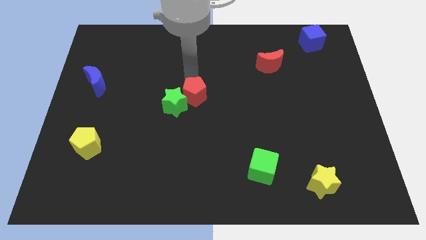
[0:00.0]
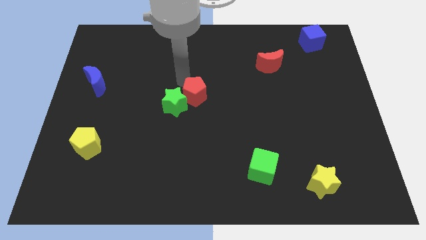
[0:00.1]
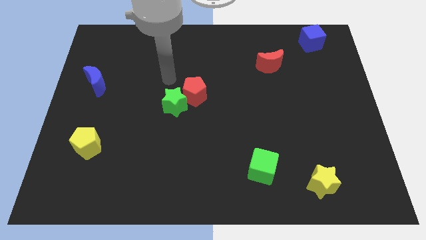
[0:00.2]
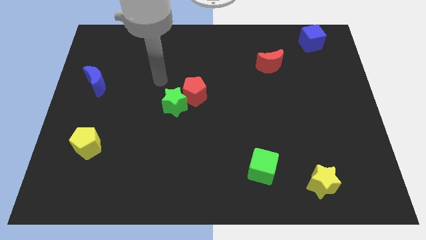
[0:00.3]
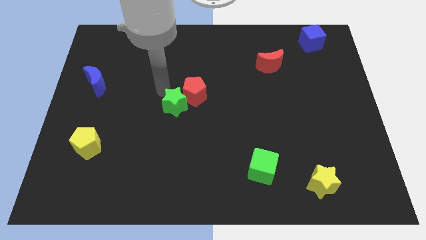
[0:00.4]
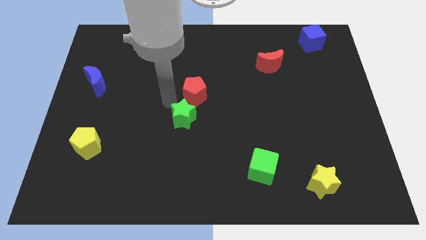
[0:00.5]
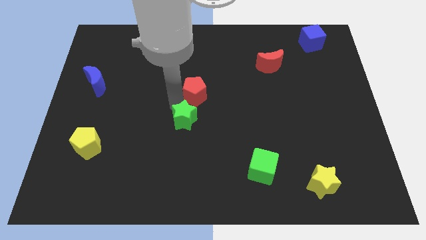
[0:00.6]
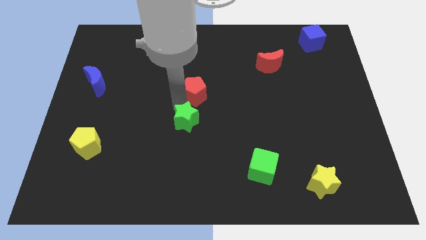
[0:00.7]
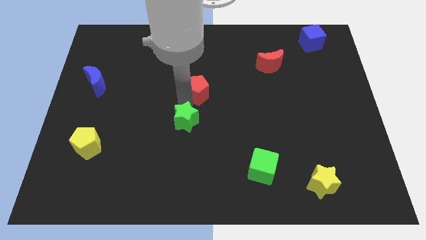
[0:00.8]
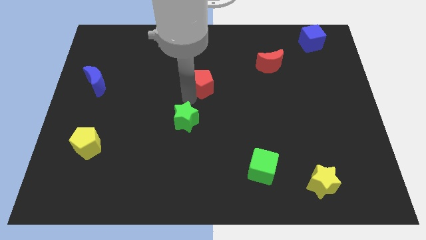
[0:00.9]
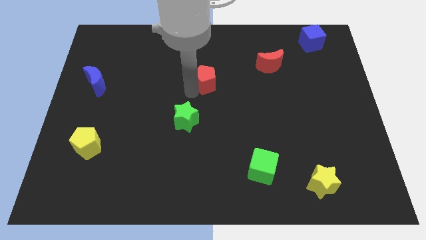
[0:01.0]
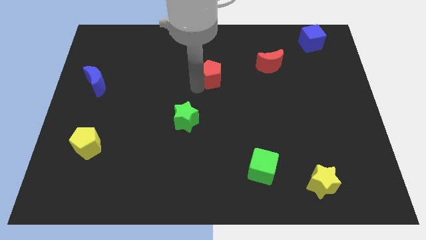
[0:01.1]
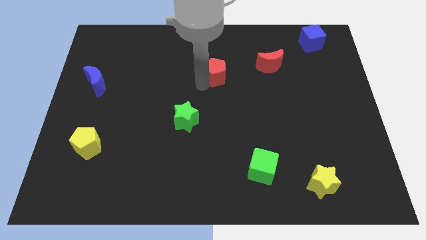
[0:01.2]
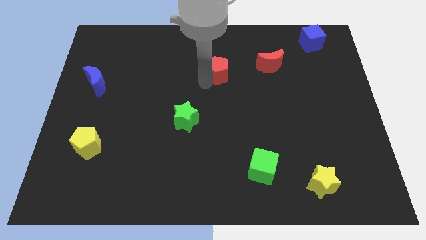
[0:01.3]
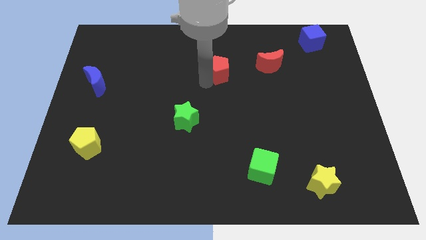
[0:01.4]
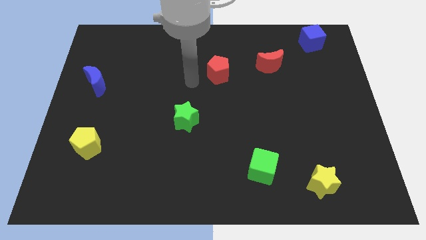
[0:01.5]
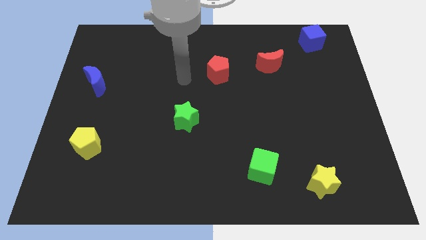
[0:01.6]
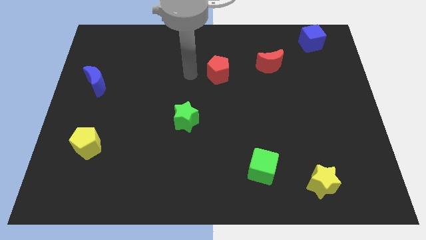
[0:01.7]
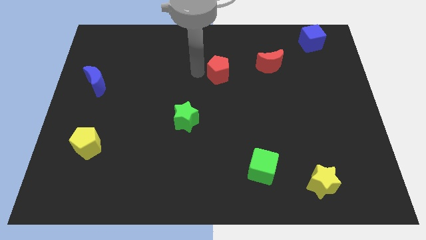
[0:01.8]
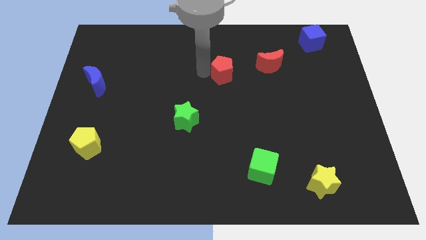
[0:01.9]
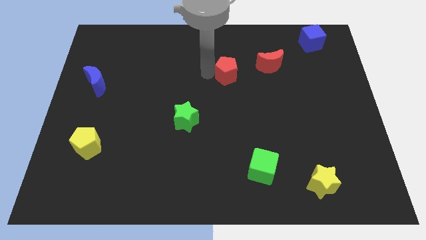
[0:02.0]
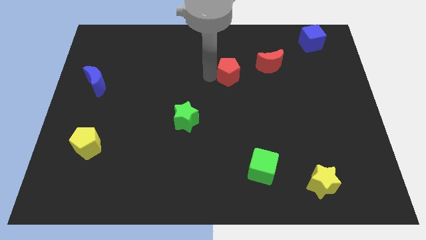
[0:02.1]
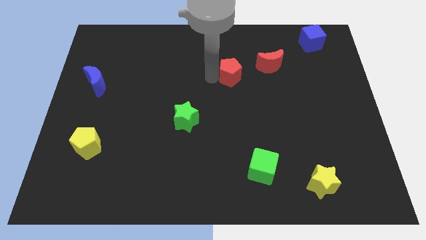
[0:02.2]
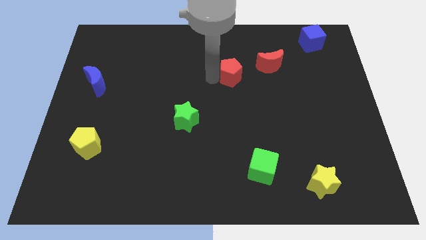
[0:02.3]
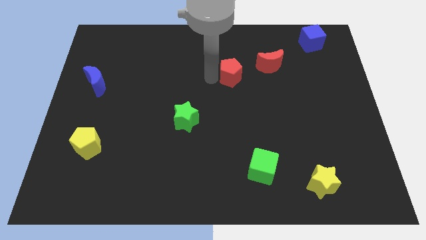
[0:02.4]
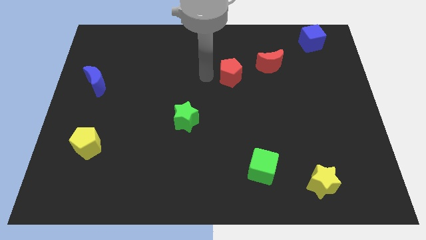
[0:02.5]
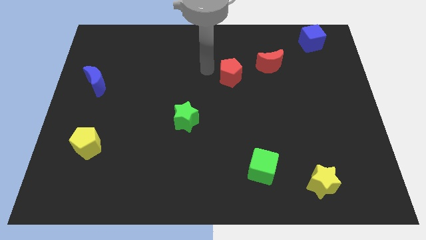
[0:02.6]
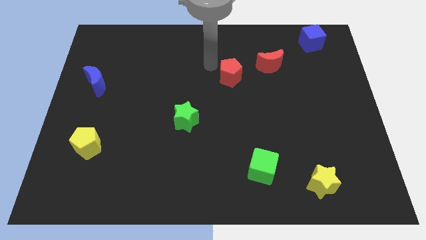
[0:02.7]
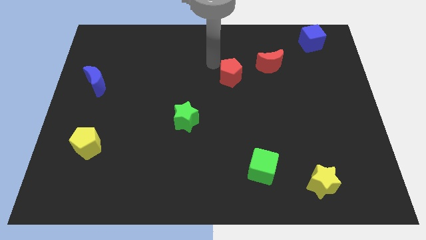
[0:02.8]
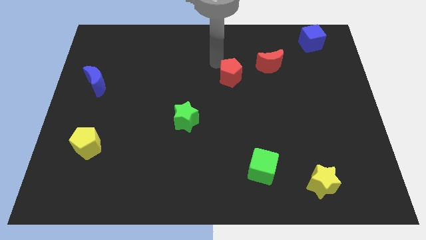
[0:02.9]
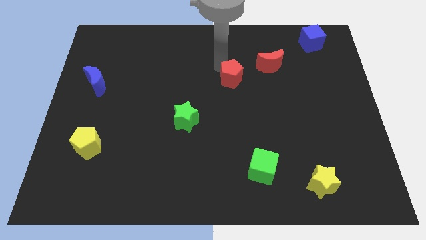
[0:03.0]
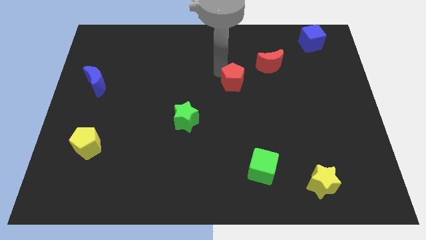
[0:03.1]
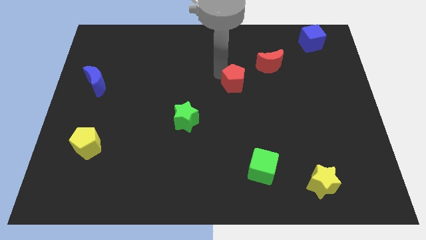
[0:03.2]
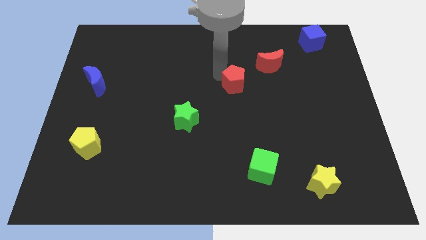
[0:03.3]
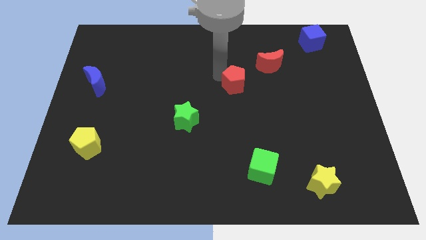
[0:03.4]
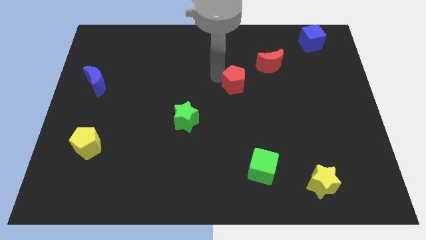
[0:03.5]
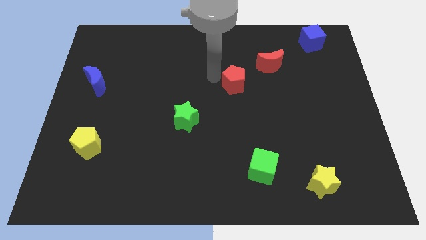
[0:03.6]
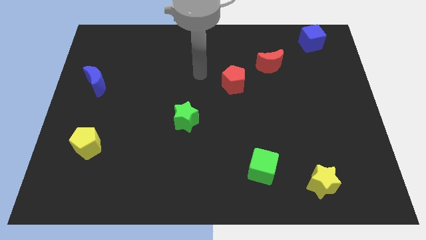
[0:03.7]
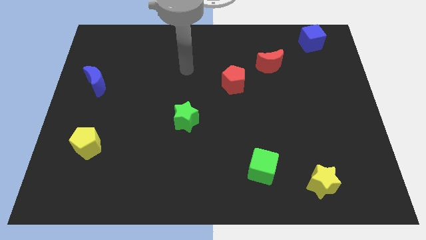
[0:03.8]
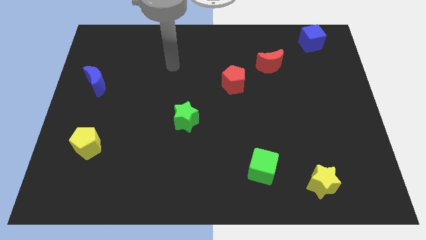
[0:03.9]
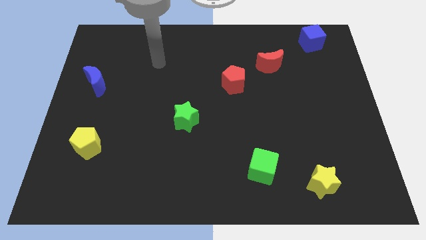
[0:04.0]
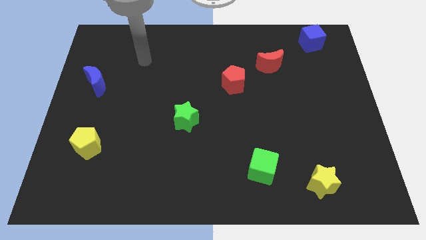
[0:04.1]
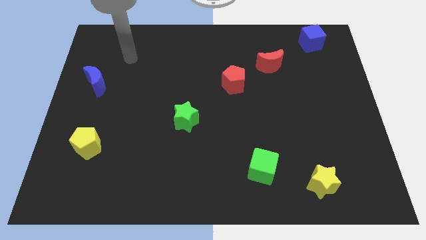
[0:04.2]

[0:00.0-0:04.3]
adjust the green star and the red pentagon to form a diagonal line

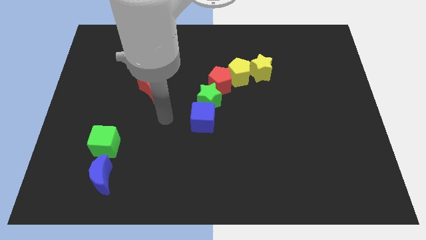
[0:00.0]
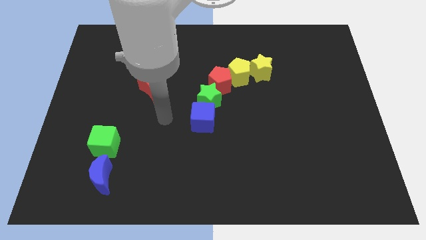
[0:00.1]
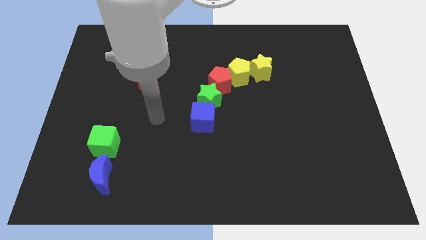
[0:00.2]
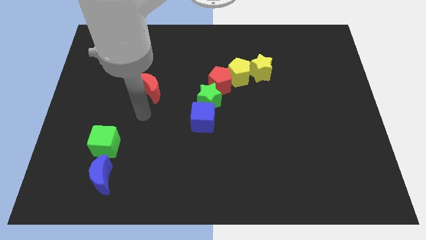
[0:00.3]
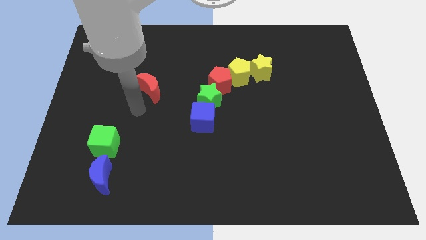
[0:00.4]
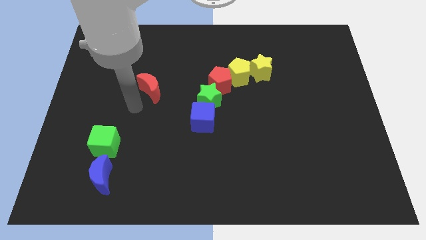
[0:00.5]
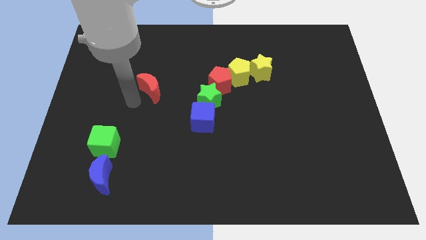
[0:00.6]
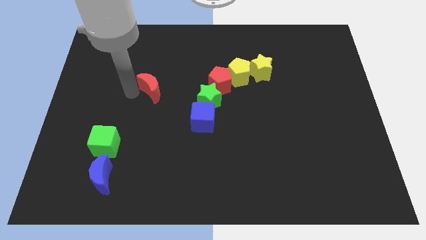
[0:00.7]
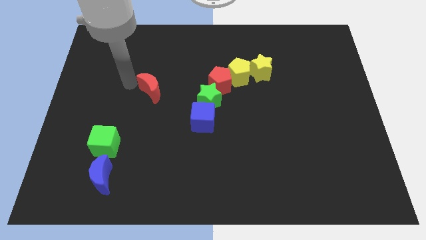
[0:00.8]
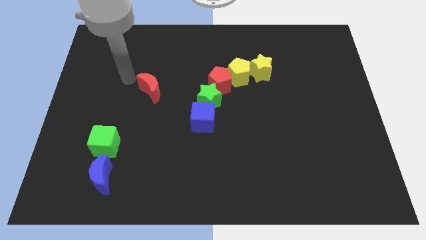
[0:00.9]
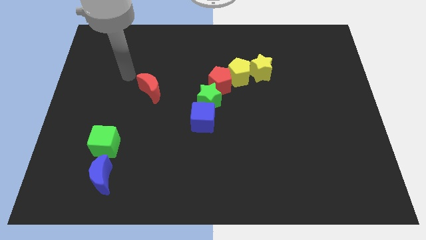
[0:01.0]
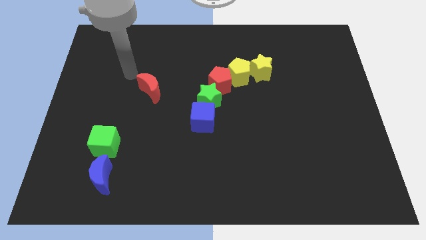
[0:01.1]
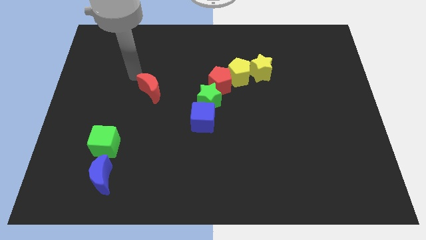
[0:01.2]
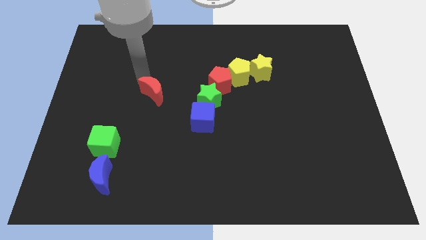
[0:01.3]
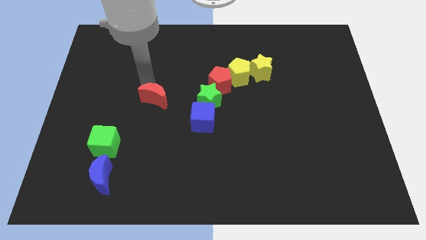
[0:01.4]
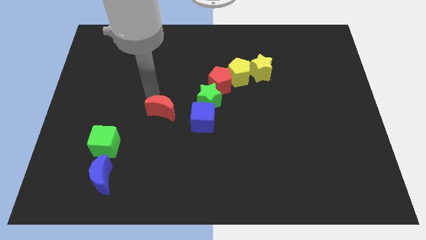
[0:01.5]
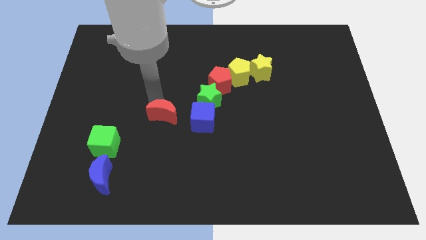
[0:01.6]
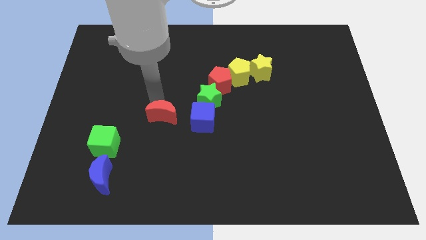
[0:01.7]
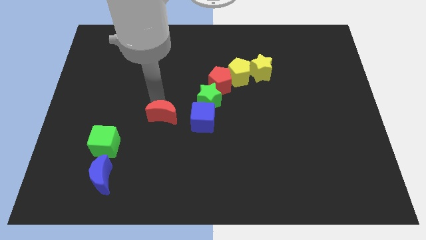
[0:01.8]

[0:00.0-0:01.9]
push the red crescent slightly to the bottom of the board

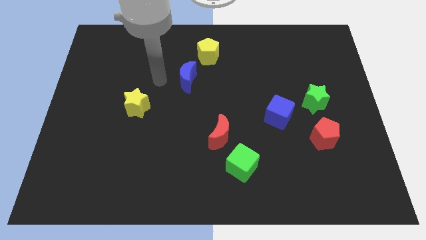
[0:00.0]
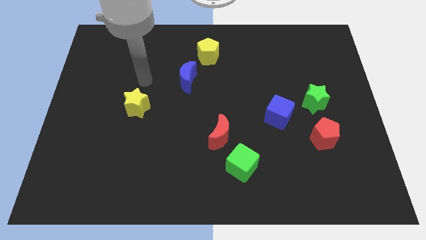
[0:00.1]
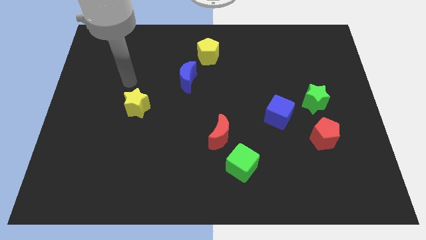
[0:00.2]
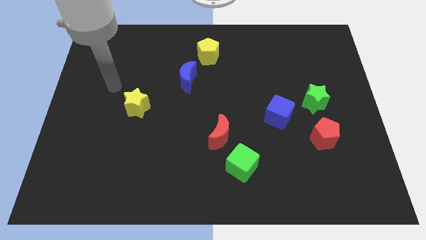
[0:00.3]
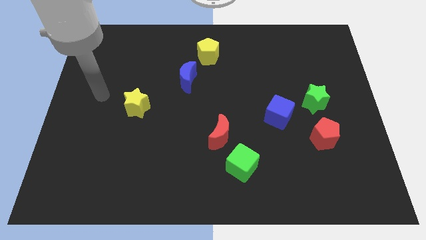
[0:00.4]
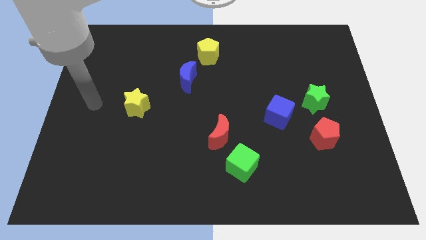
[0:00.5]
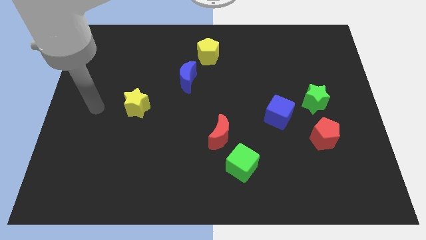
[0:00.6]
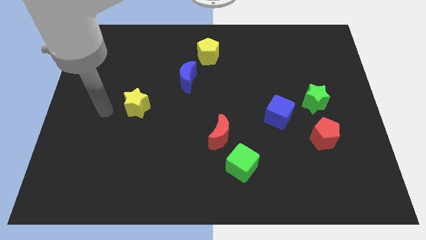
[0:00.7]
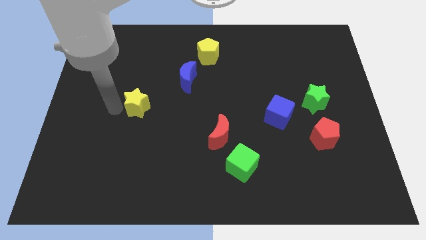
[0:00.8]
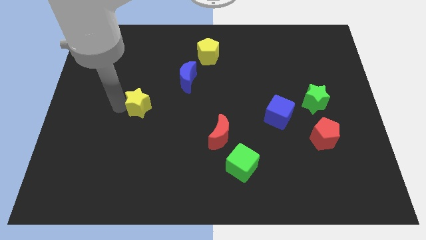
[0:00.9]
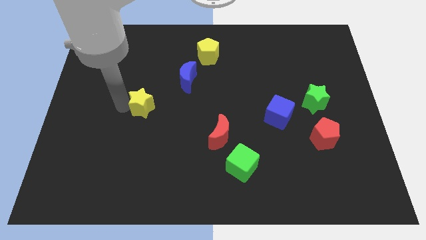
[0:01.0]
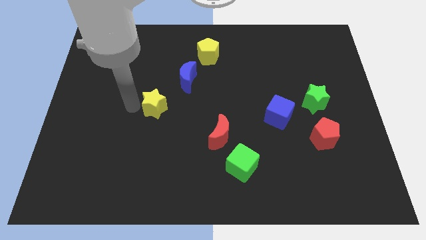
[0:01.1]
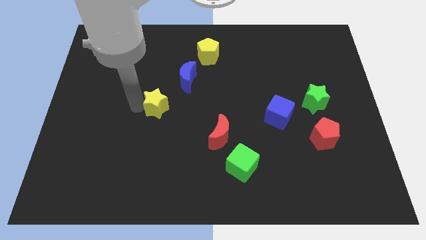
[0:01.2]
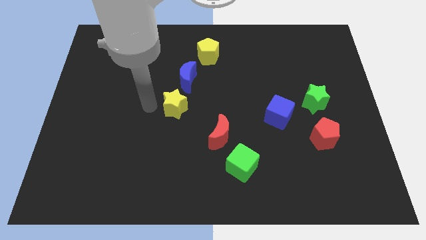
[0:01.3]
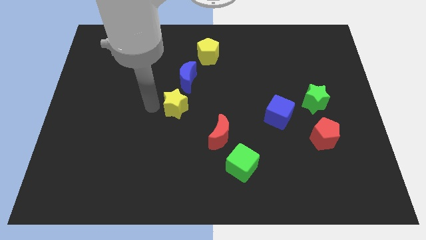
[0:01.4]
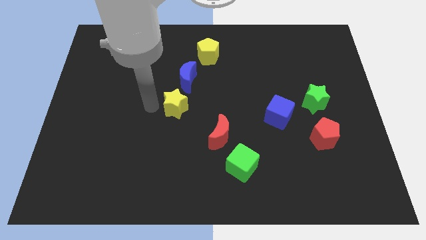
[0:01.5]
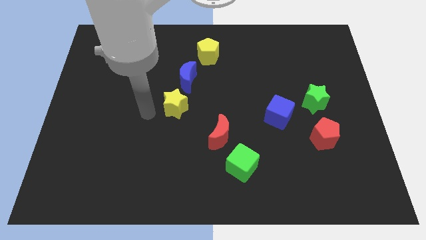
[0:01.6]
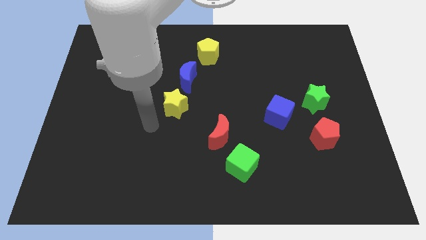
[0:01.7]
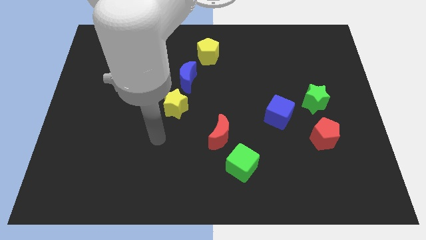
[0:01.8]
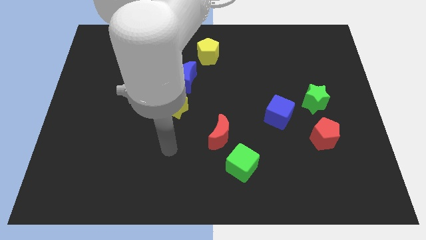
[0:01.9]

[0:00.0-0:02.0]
move the yellow star towards the right

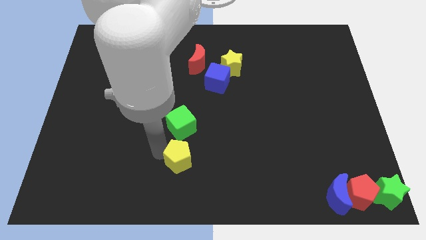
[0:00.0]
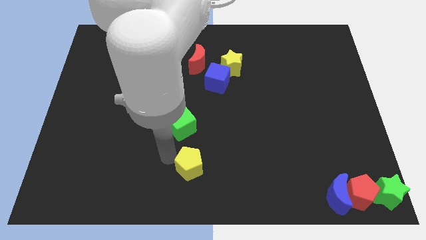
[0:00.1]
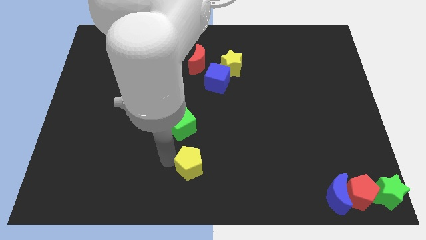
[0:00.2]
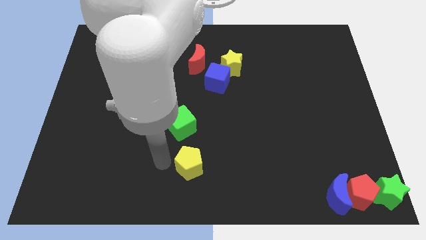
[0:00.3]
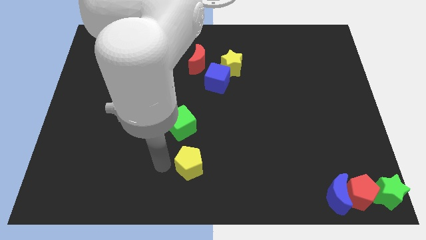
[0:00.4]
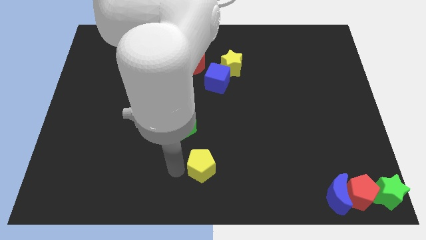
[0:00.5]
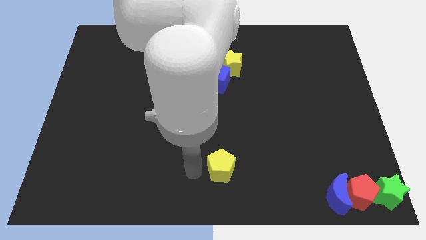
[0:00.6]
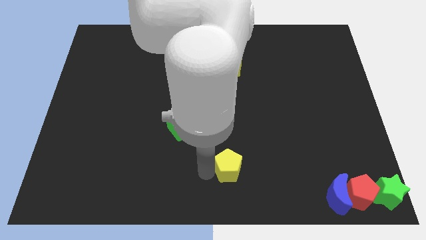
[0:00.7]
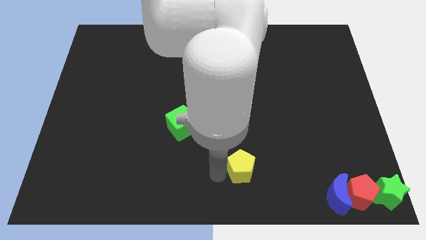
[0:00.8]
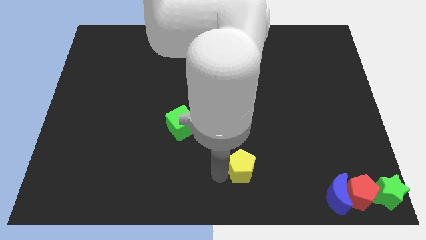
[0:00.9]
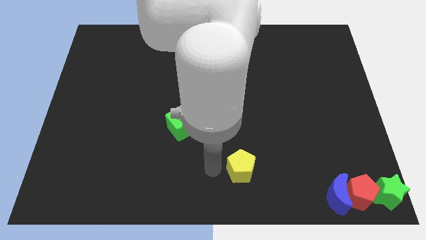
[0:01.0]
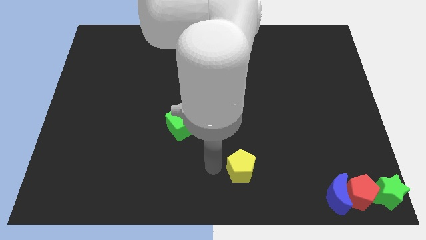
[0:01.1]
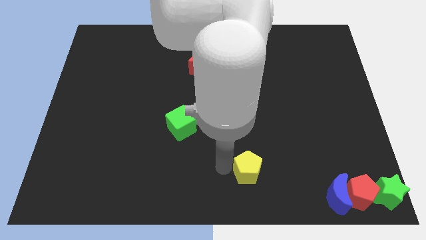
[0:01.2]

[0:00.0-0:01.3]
move the yellow pentagon to the bottom right of the green cube
